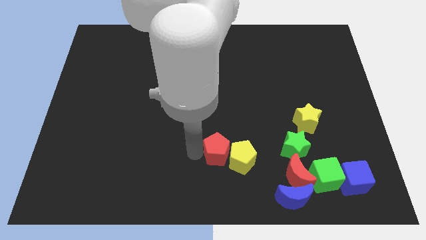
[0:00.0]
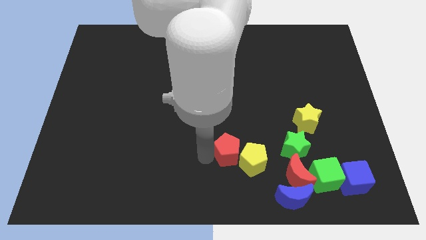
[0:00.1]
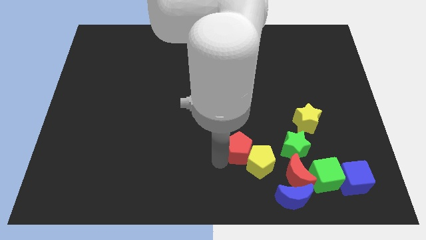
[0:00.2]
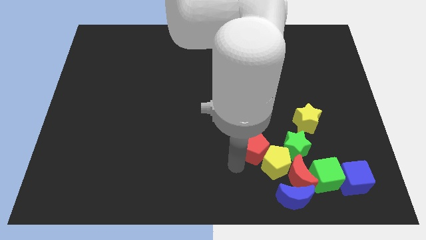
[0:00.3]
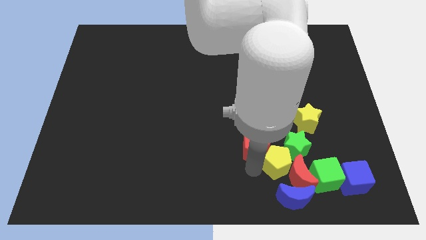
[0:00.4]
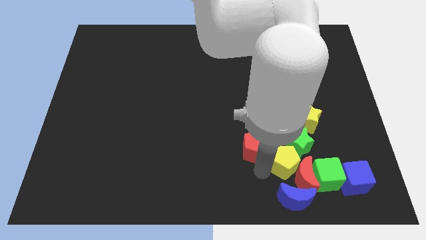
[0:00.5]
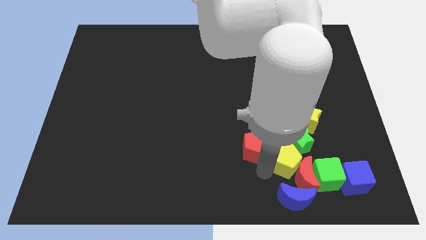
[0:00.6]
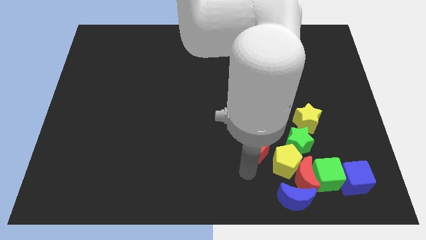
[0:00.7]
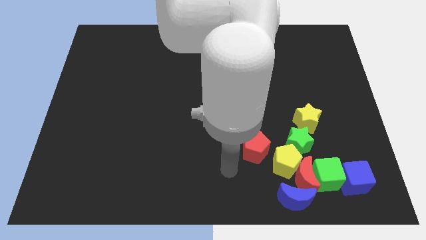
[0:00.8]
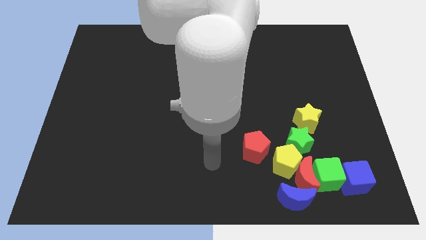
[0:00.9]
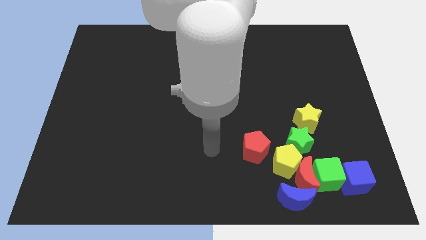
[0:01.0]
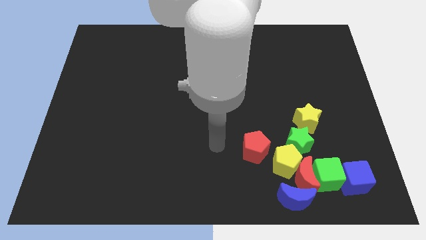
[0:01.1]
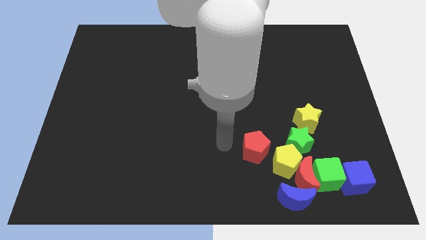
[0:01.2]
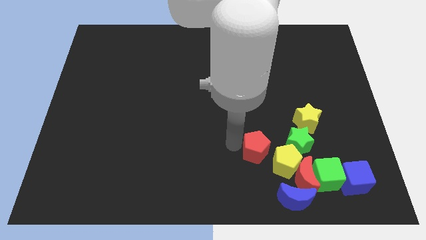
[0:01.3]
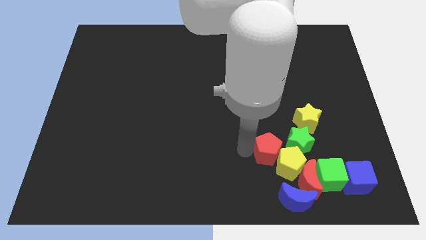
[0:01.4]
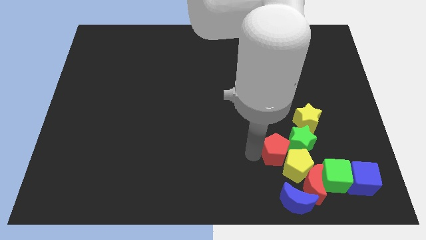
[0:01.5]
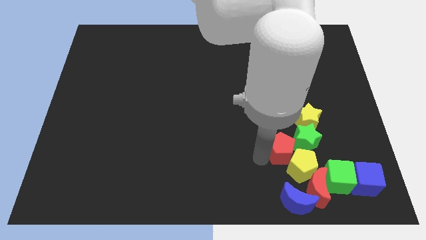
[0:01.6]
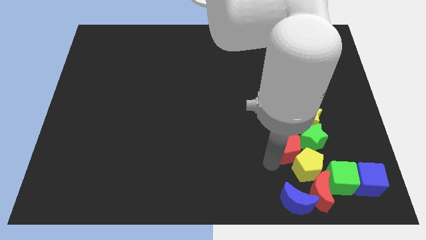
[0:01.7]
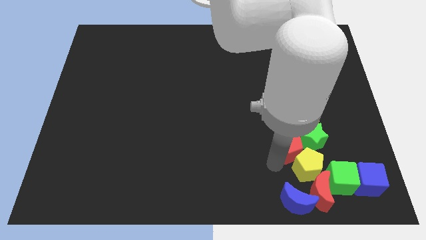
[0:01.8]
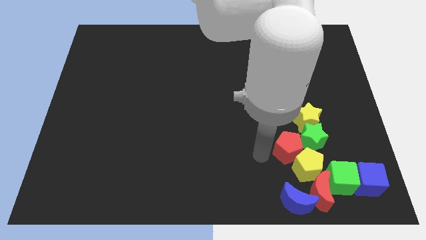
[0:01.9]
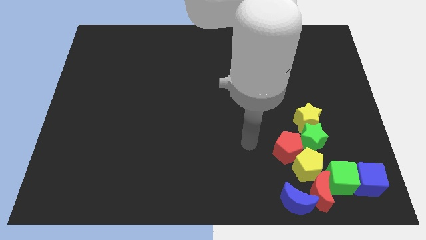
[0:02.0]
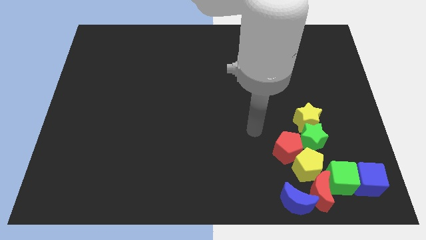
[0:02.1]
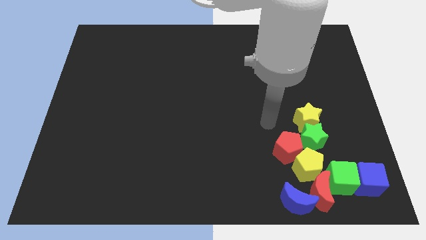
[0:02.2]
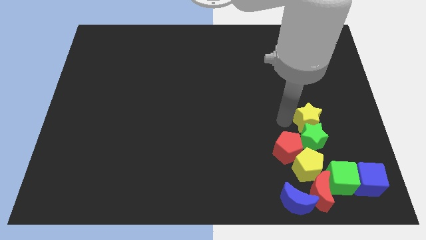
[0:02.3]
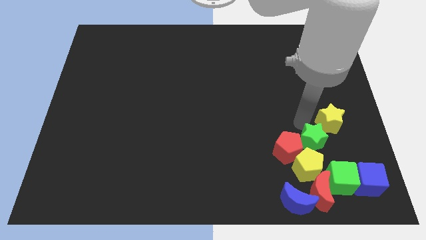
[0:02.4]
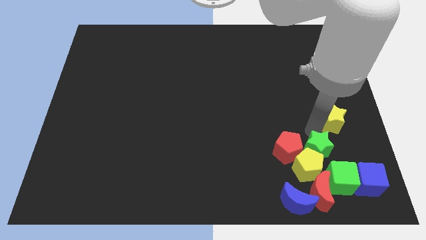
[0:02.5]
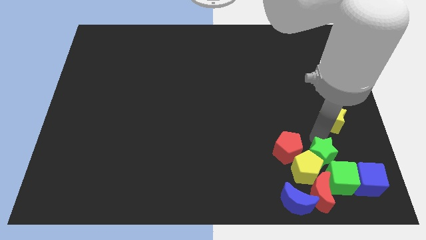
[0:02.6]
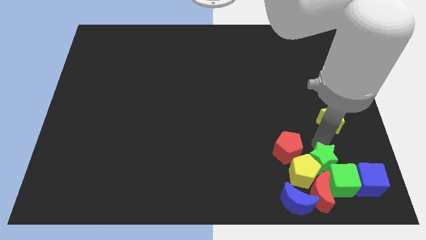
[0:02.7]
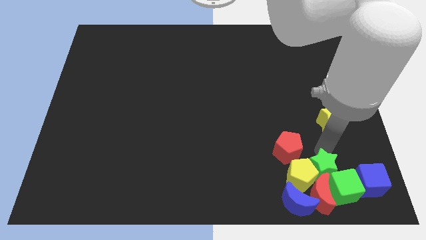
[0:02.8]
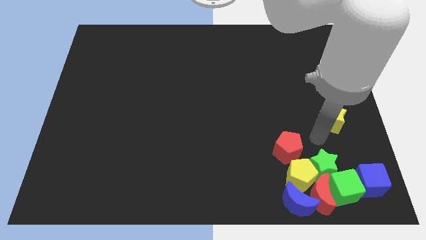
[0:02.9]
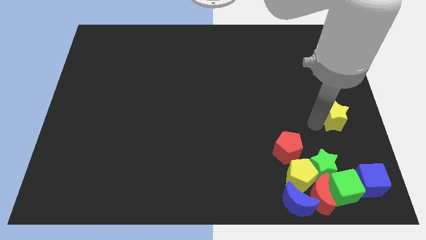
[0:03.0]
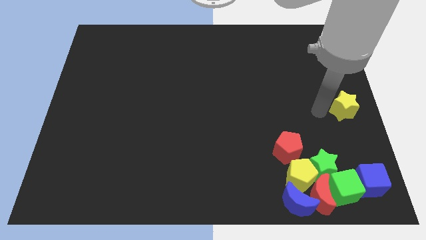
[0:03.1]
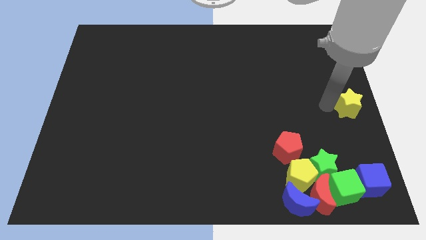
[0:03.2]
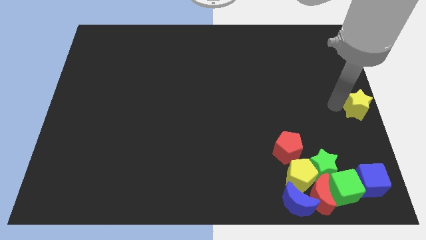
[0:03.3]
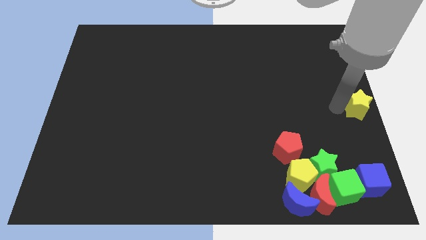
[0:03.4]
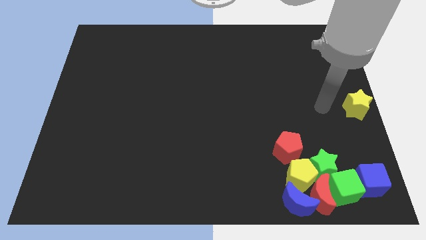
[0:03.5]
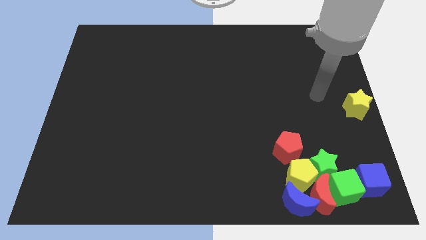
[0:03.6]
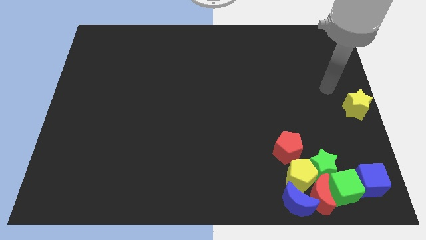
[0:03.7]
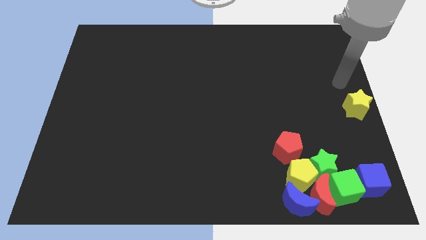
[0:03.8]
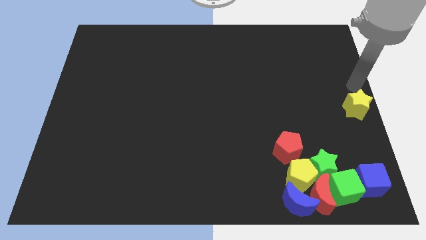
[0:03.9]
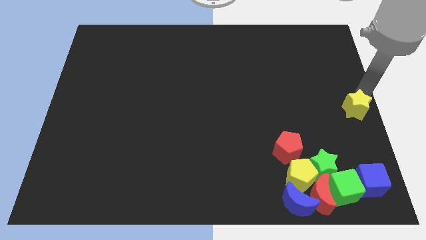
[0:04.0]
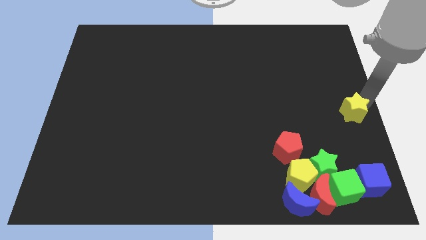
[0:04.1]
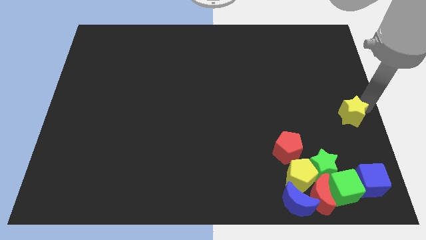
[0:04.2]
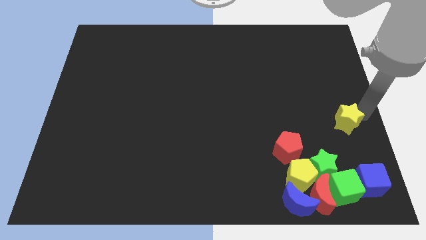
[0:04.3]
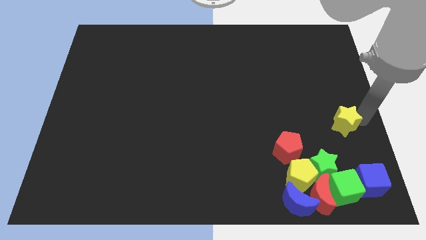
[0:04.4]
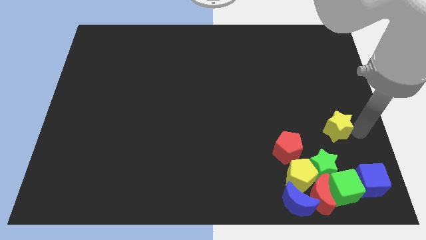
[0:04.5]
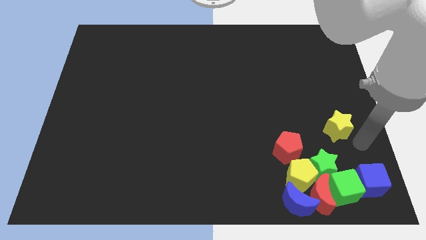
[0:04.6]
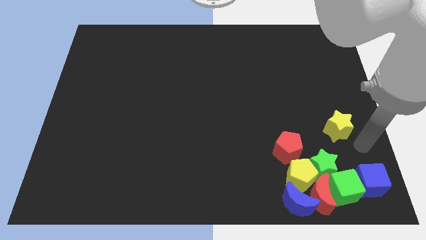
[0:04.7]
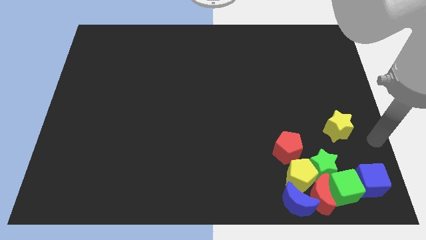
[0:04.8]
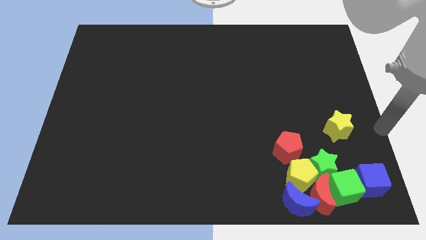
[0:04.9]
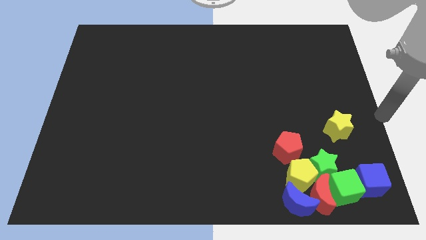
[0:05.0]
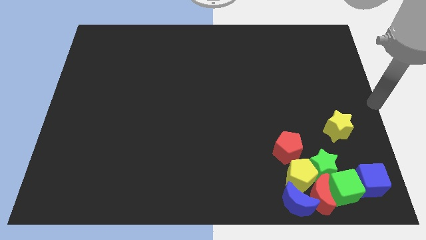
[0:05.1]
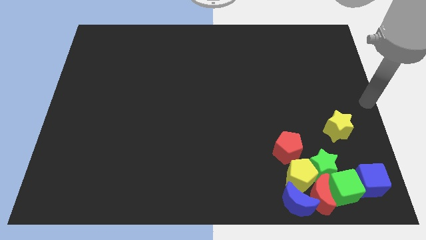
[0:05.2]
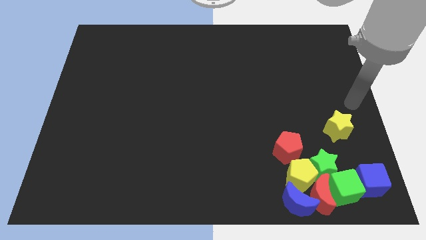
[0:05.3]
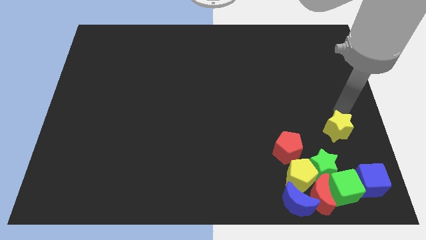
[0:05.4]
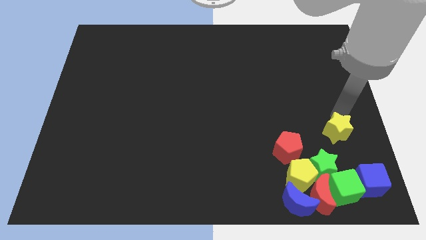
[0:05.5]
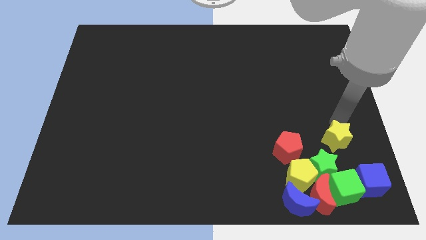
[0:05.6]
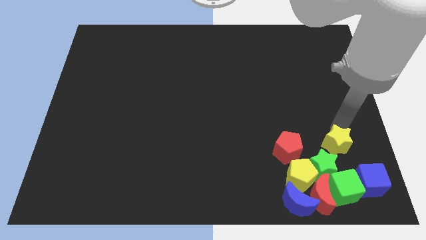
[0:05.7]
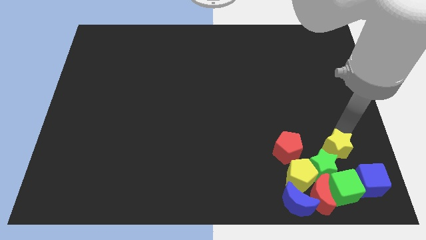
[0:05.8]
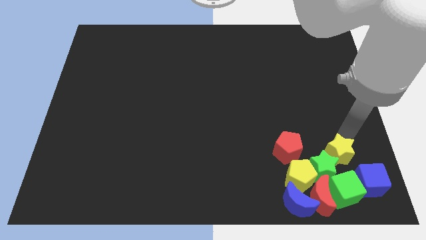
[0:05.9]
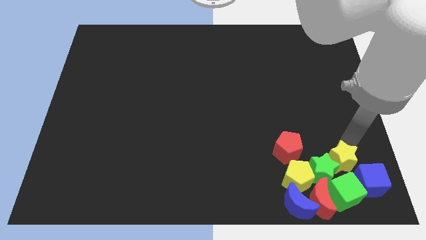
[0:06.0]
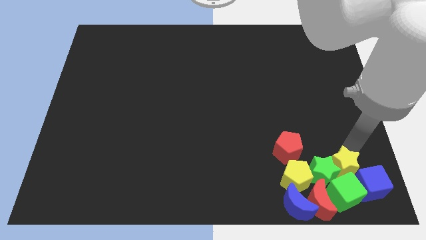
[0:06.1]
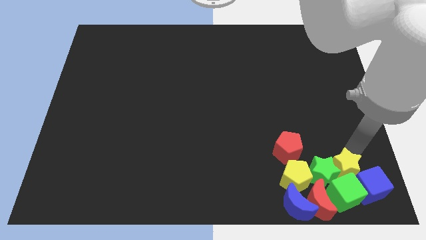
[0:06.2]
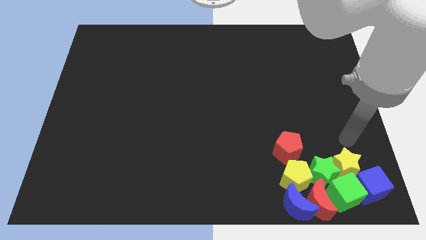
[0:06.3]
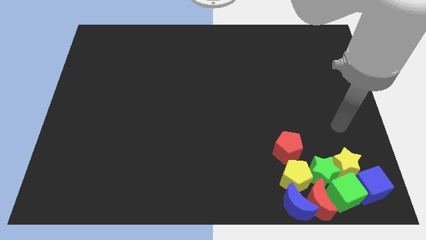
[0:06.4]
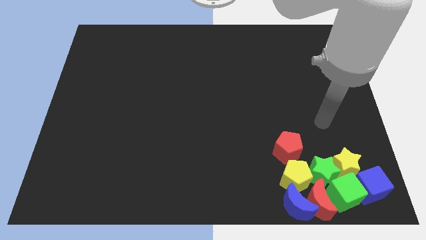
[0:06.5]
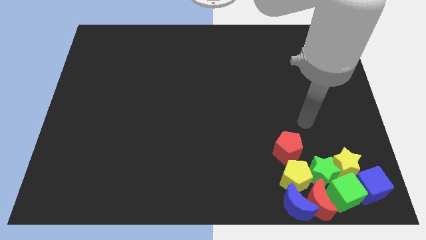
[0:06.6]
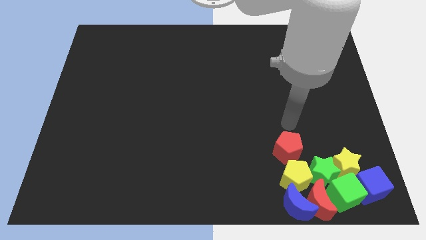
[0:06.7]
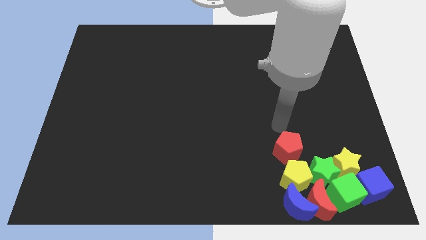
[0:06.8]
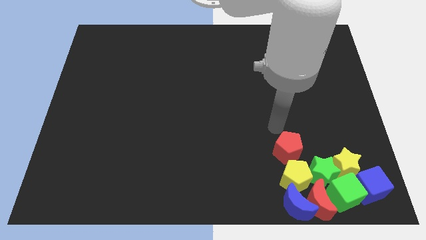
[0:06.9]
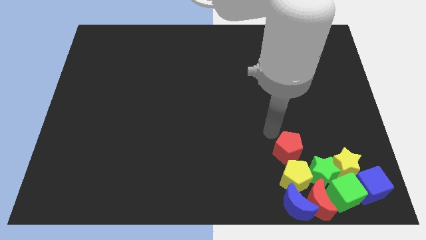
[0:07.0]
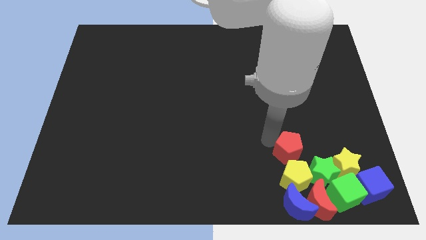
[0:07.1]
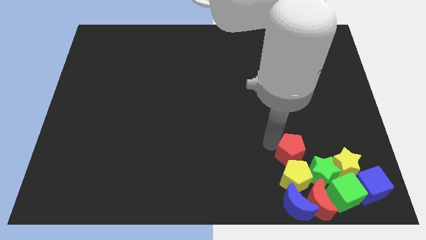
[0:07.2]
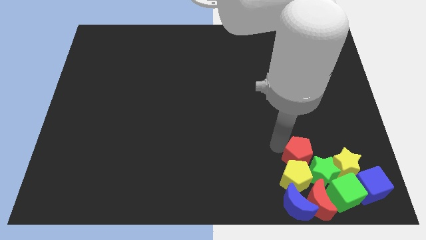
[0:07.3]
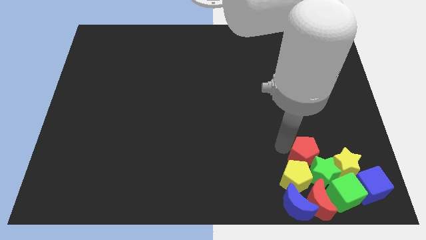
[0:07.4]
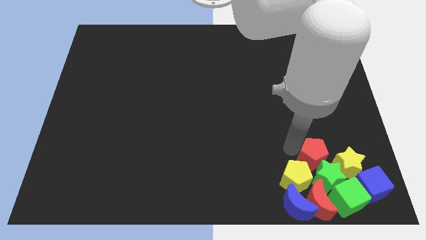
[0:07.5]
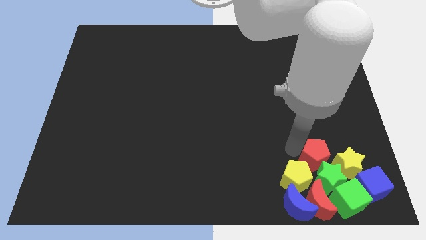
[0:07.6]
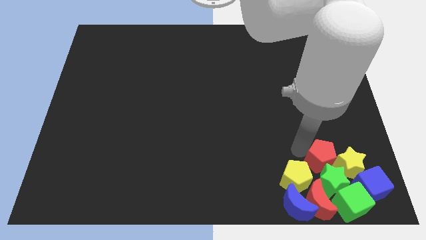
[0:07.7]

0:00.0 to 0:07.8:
push all the blocks in the bottom right of the board

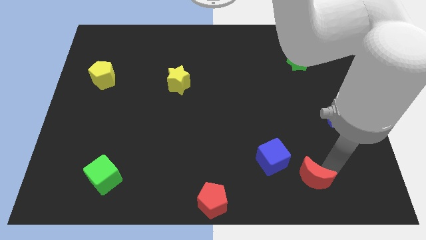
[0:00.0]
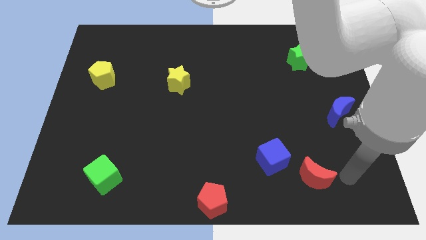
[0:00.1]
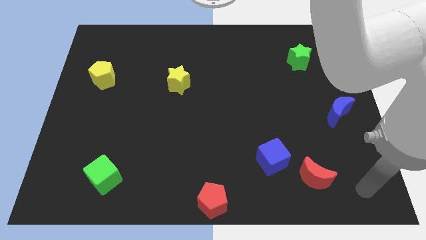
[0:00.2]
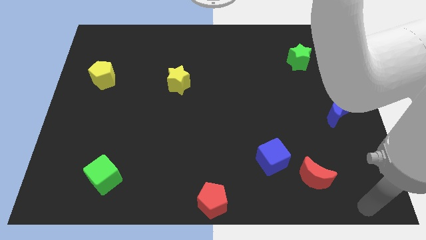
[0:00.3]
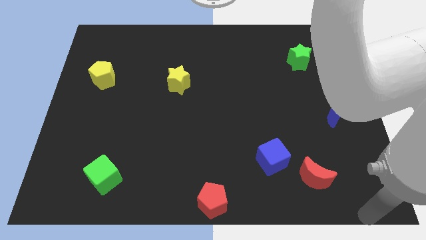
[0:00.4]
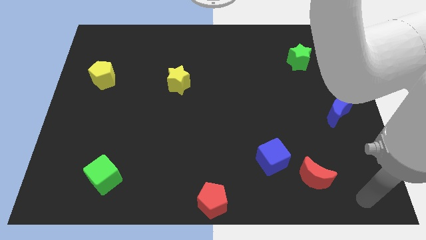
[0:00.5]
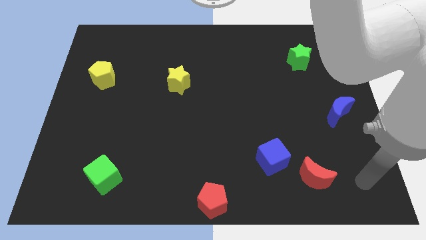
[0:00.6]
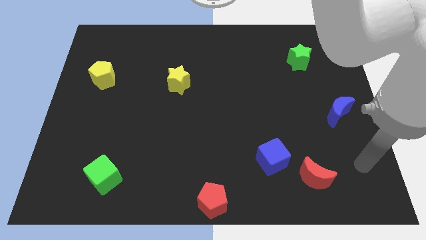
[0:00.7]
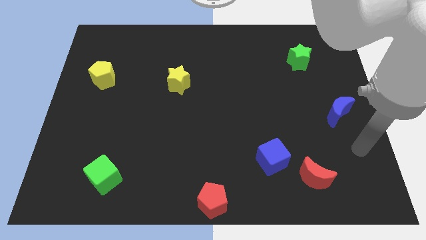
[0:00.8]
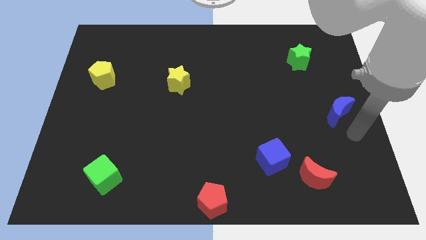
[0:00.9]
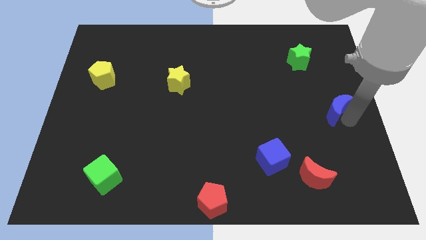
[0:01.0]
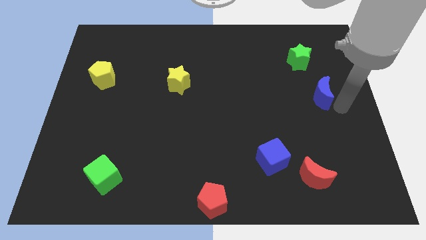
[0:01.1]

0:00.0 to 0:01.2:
touch the right side of the blue crescent

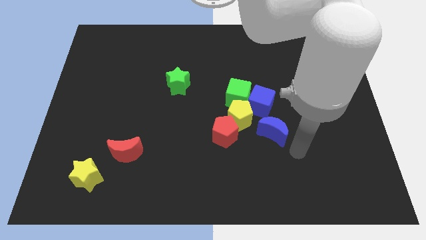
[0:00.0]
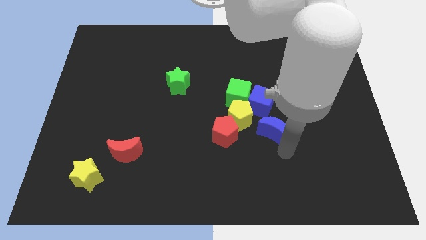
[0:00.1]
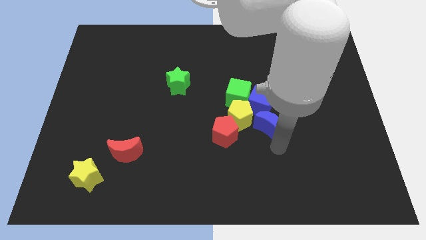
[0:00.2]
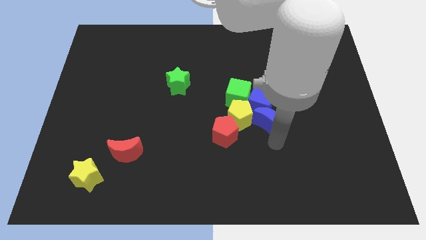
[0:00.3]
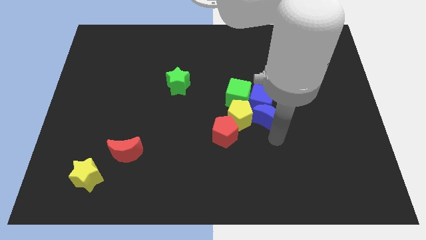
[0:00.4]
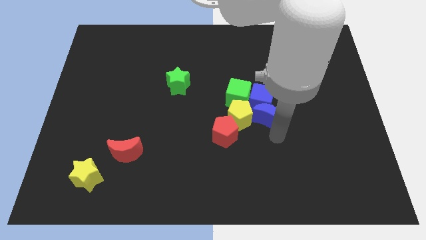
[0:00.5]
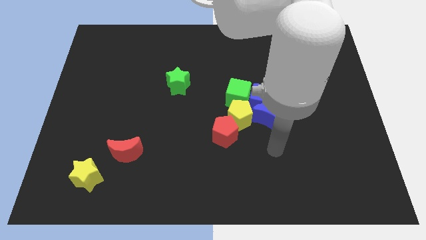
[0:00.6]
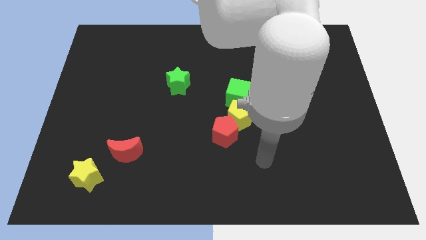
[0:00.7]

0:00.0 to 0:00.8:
place the blue moon on the right side of yellow pentagon
